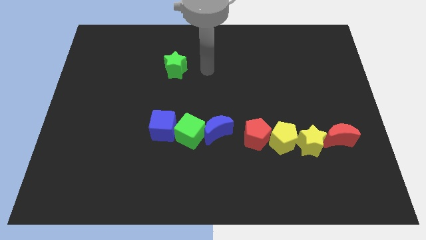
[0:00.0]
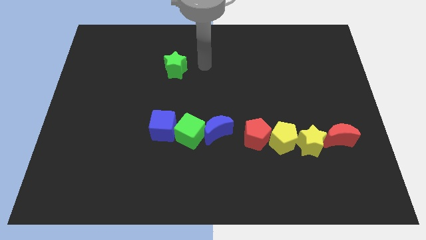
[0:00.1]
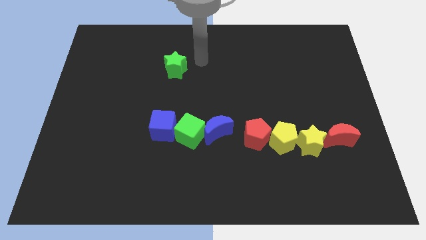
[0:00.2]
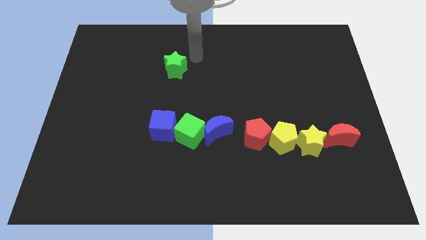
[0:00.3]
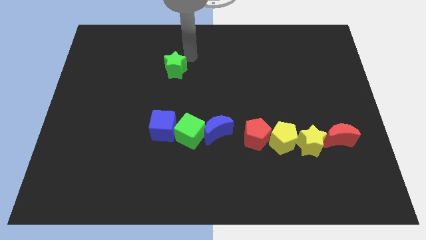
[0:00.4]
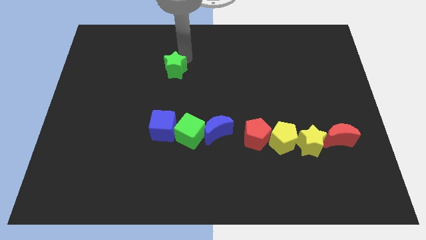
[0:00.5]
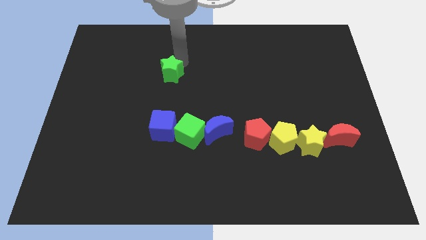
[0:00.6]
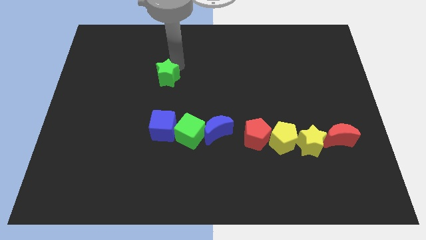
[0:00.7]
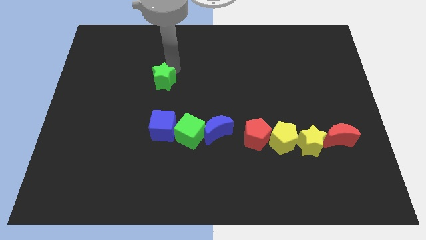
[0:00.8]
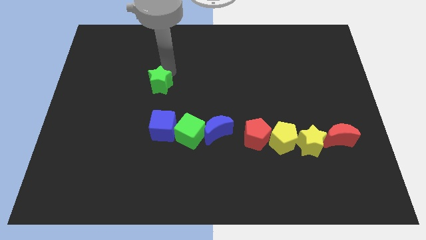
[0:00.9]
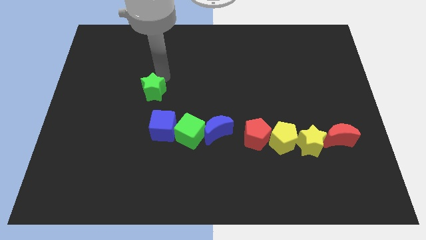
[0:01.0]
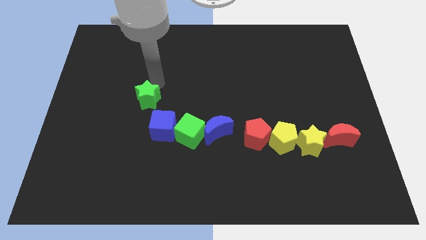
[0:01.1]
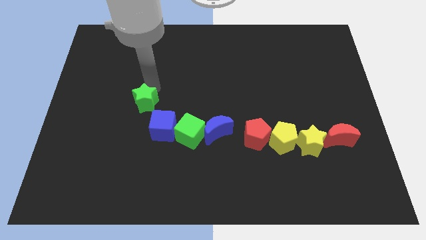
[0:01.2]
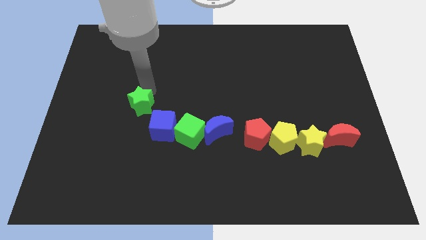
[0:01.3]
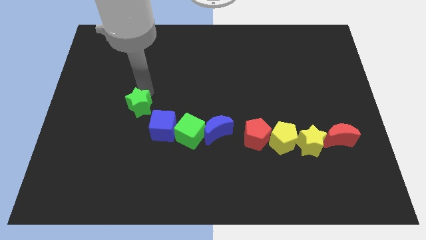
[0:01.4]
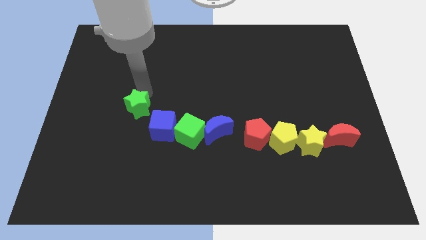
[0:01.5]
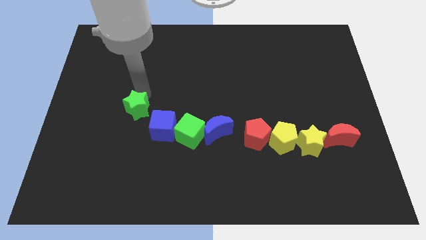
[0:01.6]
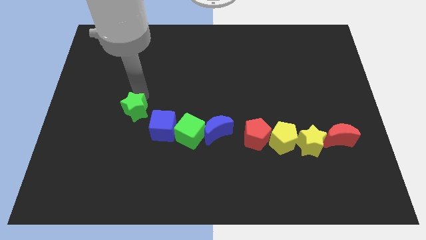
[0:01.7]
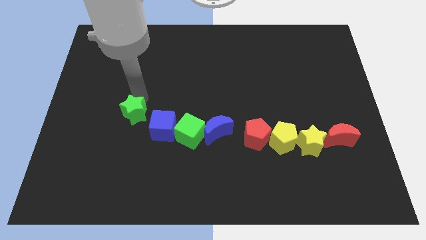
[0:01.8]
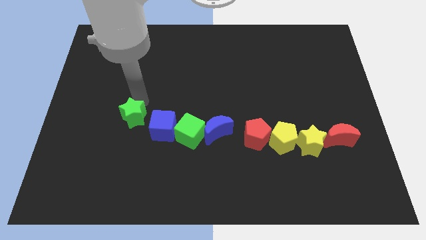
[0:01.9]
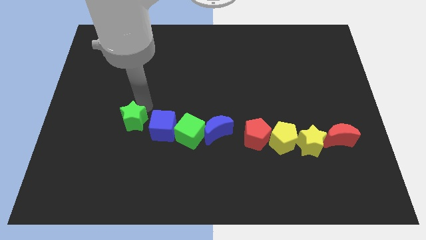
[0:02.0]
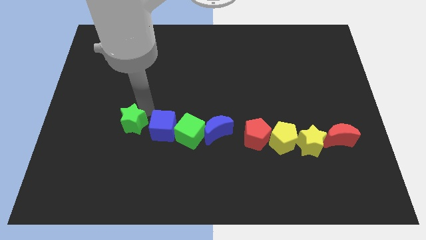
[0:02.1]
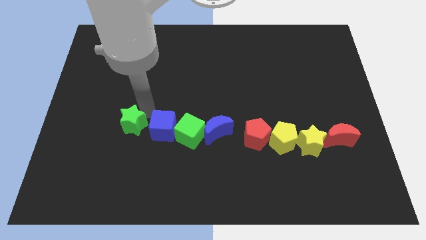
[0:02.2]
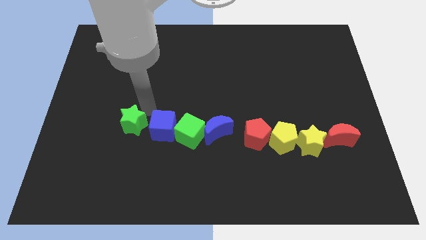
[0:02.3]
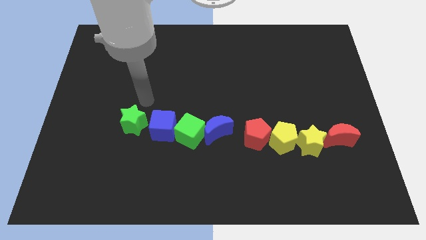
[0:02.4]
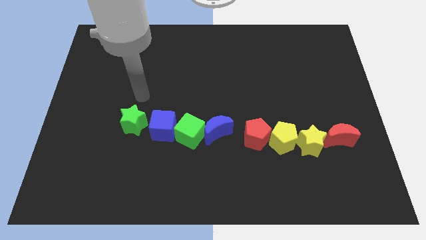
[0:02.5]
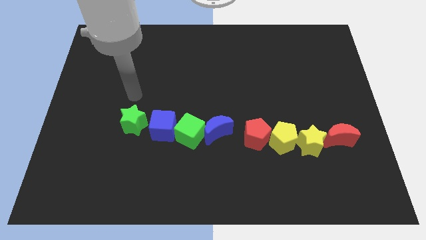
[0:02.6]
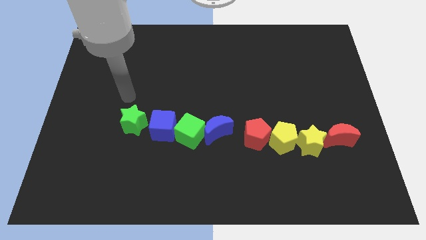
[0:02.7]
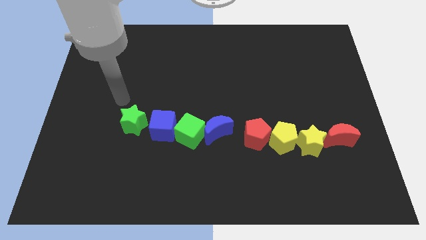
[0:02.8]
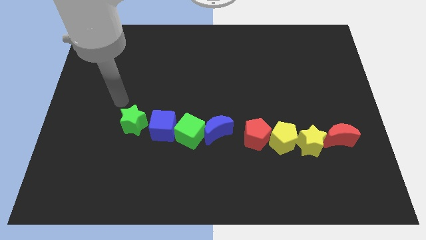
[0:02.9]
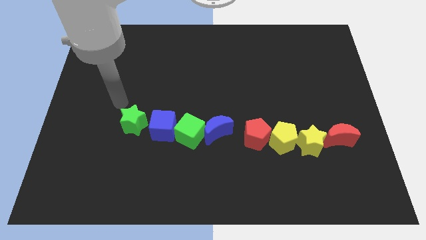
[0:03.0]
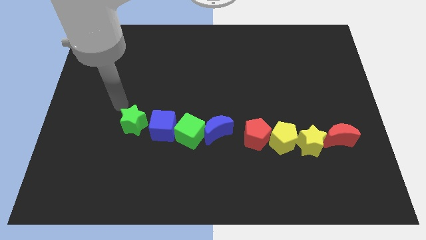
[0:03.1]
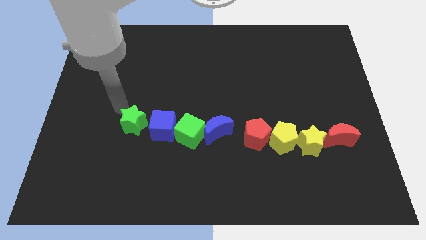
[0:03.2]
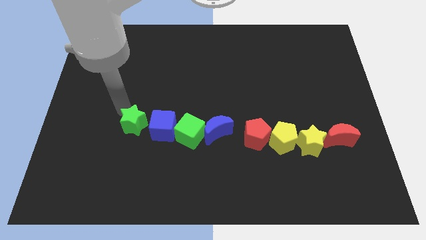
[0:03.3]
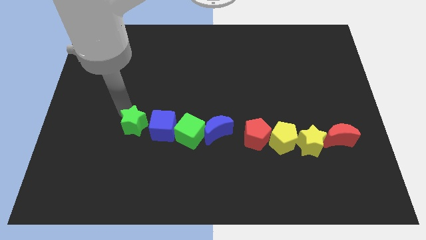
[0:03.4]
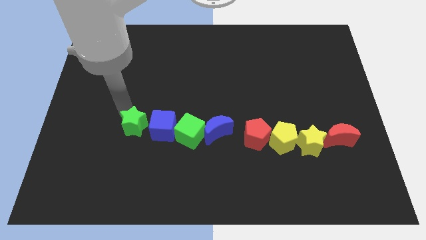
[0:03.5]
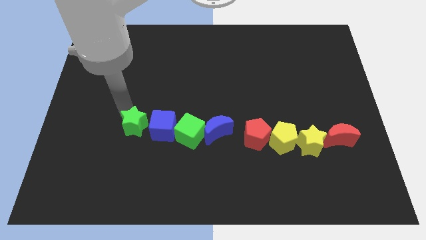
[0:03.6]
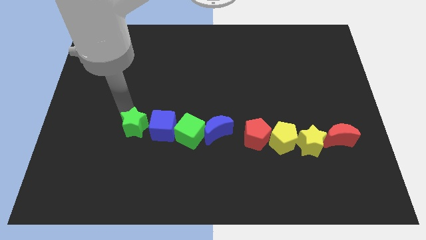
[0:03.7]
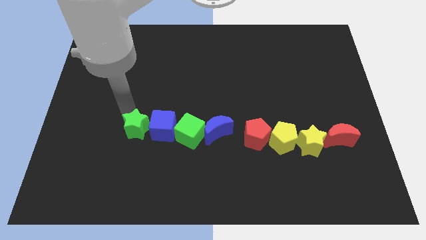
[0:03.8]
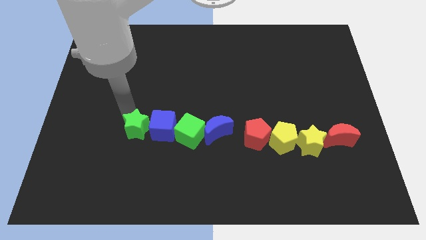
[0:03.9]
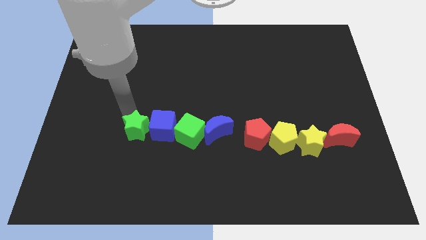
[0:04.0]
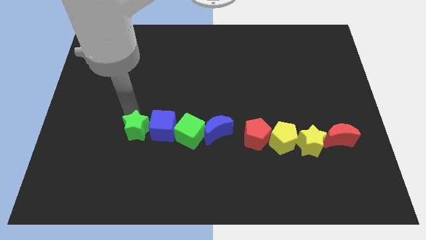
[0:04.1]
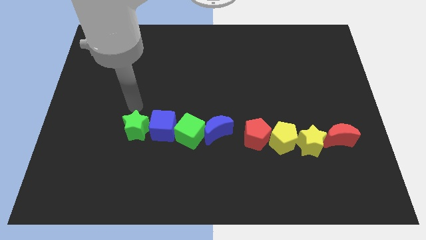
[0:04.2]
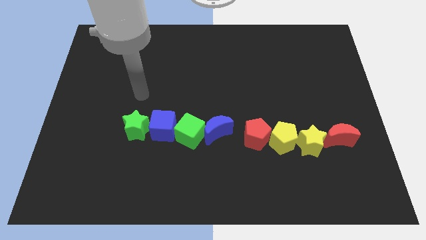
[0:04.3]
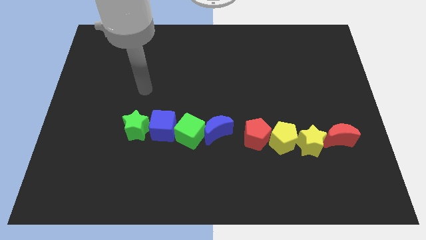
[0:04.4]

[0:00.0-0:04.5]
place the green star left to the blue cube

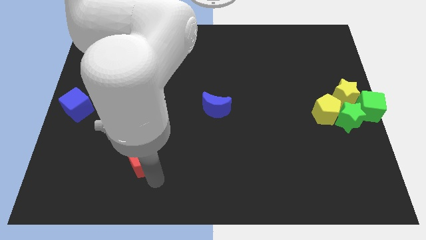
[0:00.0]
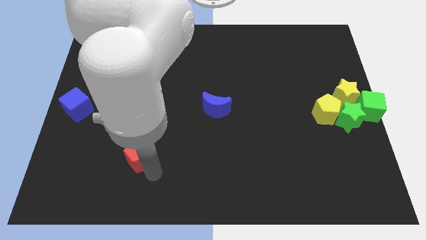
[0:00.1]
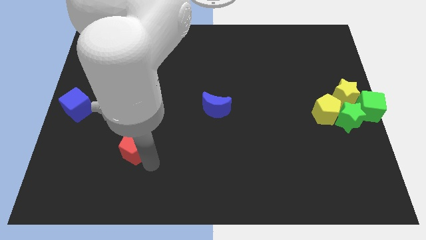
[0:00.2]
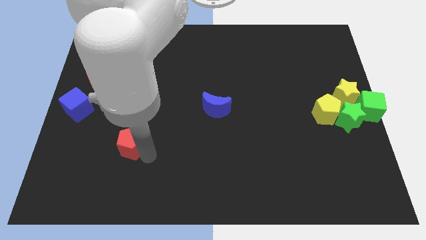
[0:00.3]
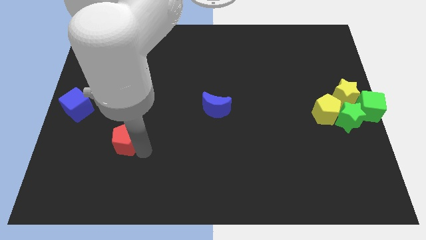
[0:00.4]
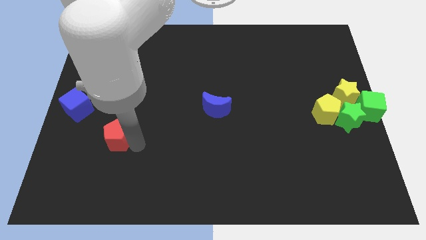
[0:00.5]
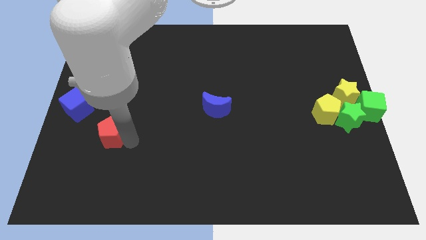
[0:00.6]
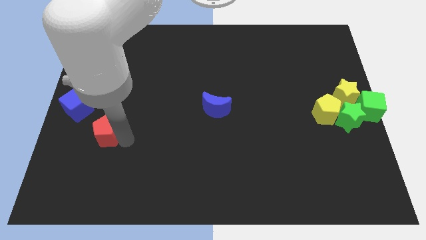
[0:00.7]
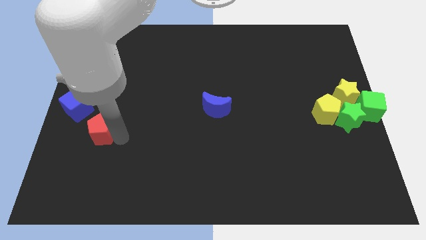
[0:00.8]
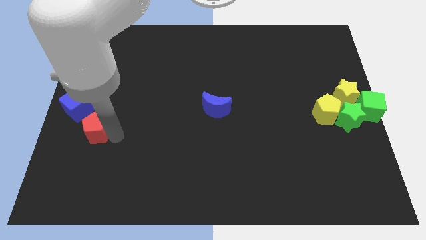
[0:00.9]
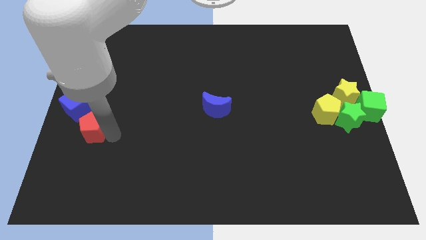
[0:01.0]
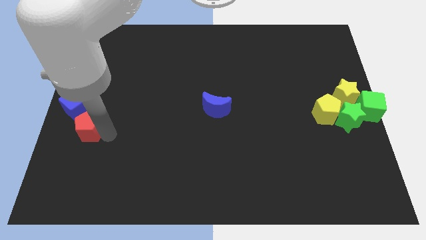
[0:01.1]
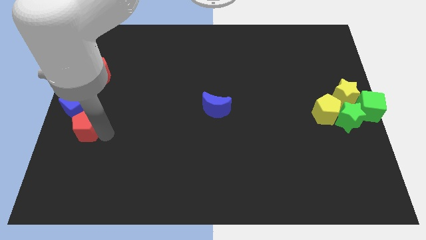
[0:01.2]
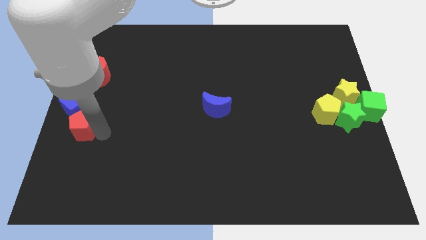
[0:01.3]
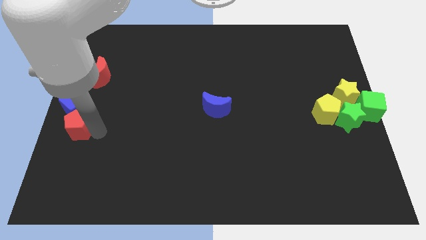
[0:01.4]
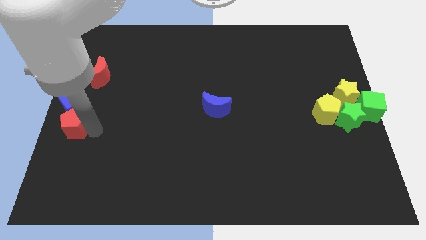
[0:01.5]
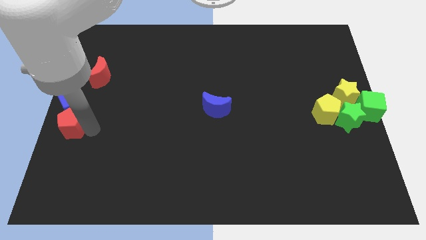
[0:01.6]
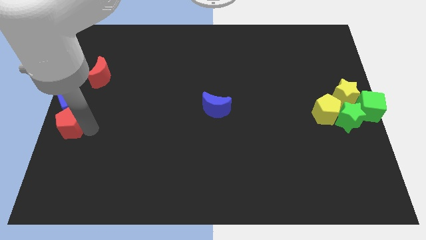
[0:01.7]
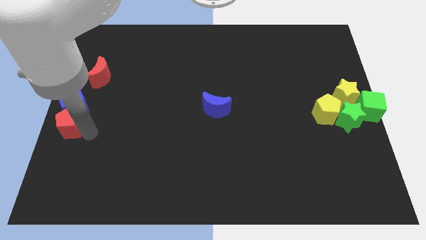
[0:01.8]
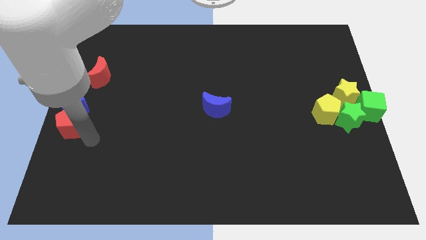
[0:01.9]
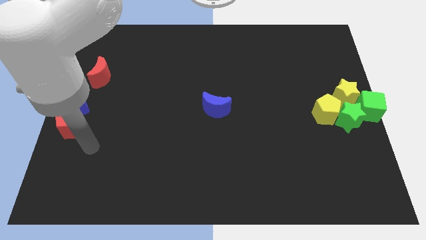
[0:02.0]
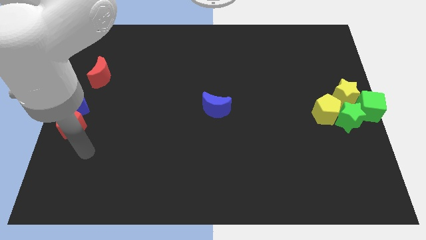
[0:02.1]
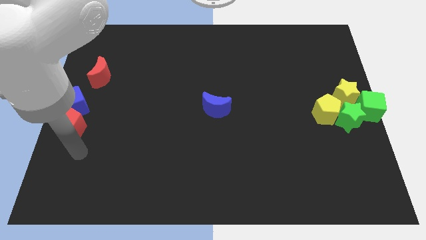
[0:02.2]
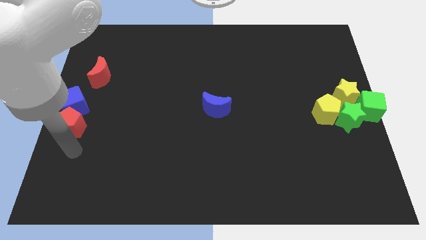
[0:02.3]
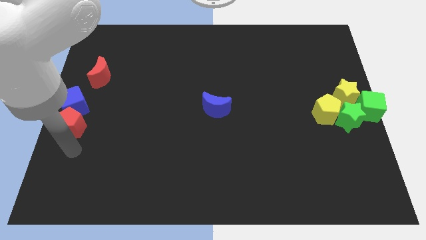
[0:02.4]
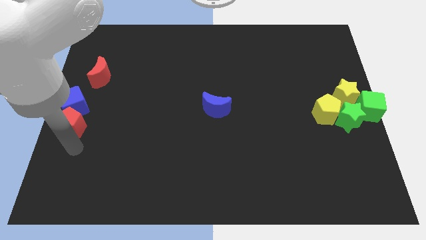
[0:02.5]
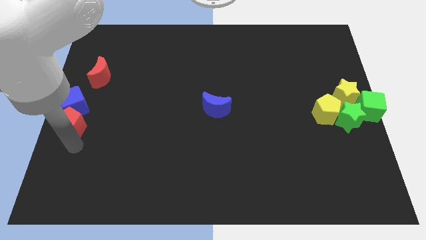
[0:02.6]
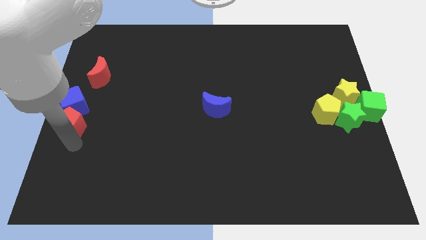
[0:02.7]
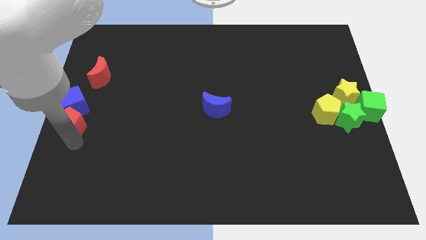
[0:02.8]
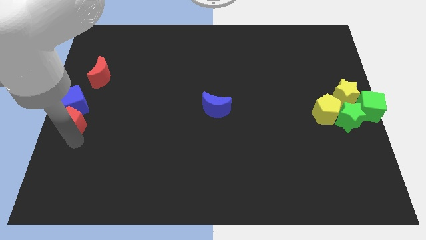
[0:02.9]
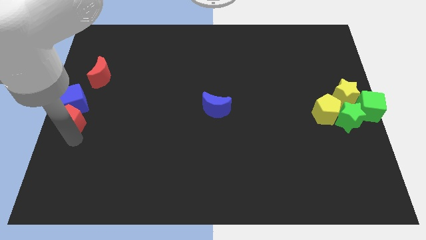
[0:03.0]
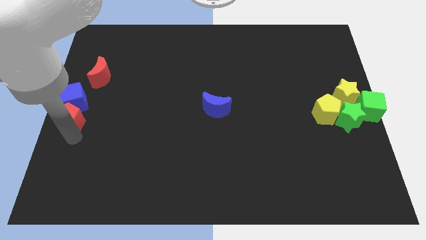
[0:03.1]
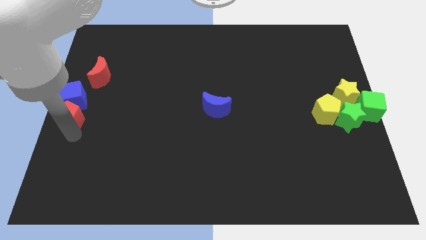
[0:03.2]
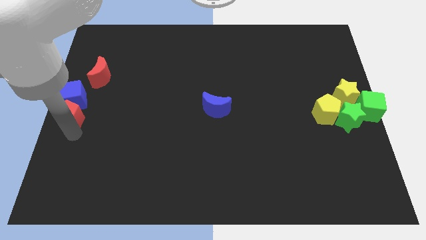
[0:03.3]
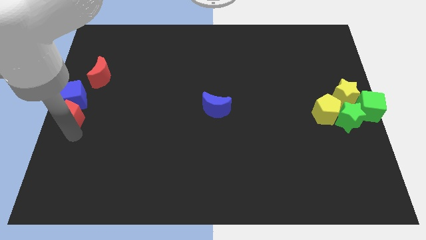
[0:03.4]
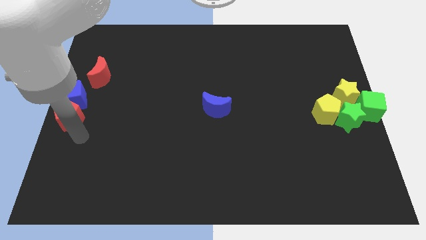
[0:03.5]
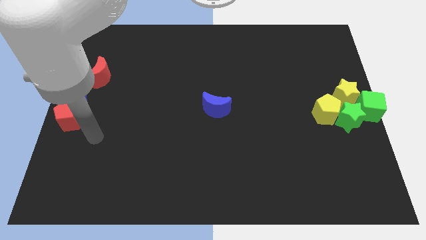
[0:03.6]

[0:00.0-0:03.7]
push the red pentagon into the blue cube

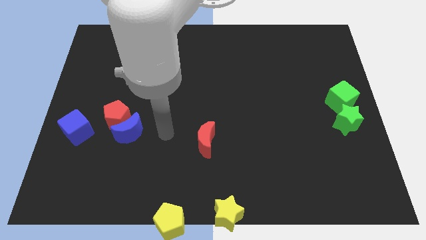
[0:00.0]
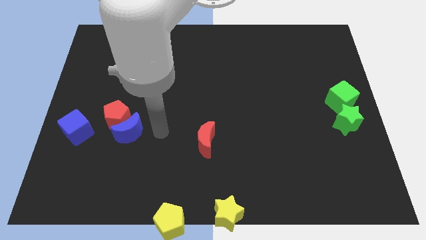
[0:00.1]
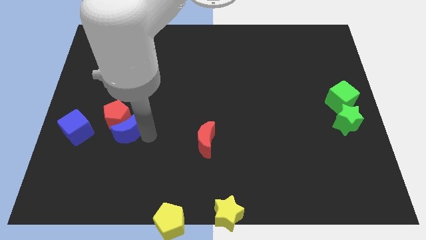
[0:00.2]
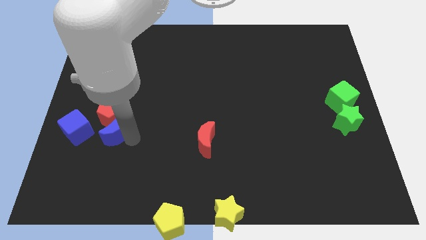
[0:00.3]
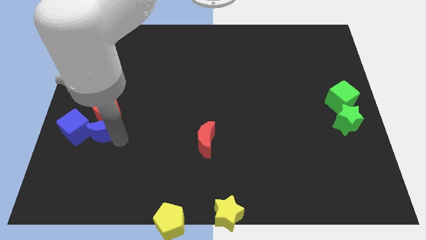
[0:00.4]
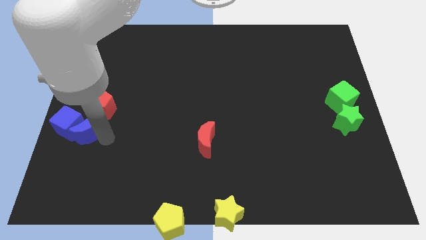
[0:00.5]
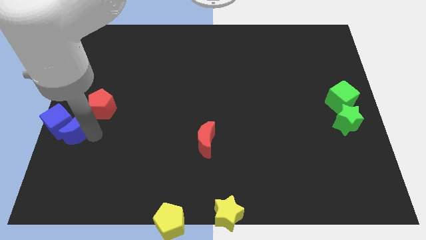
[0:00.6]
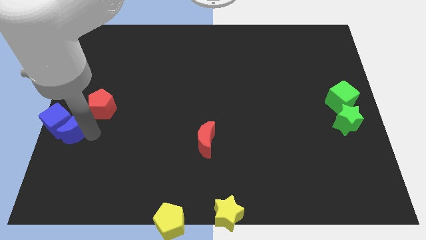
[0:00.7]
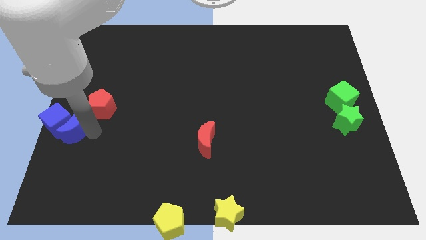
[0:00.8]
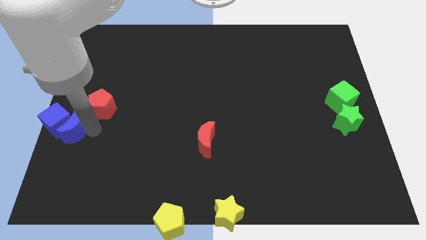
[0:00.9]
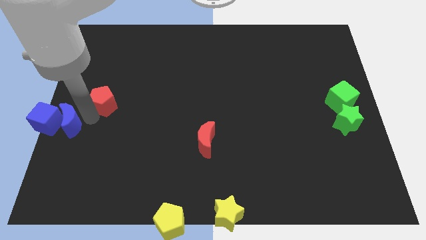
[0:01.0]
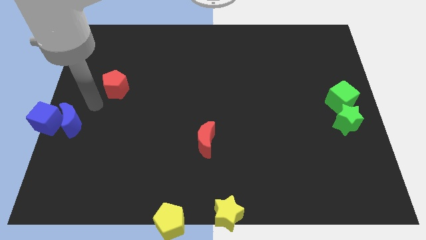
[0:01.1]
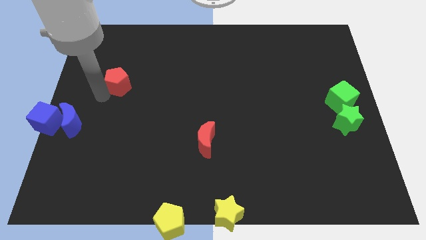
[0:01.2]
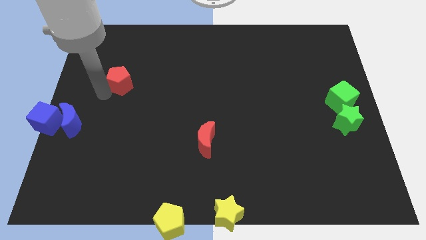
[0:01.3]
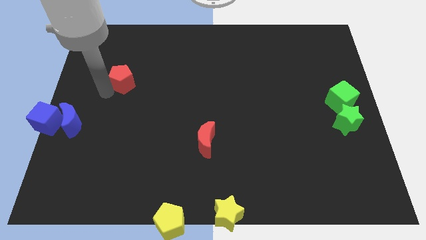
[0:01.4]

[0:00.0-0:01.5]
place blue crescent into blue cube
